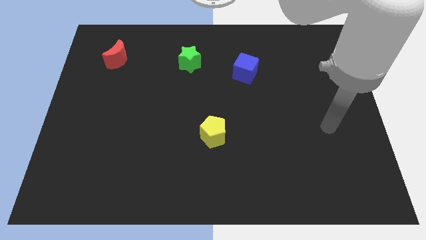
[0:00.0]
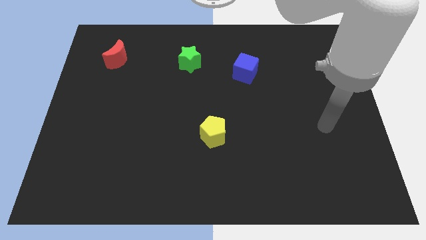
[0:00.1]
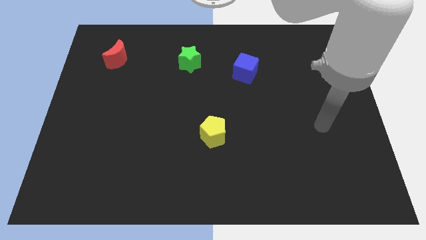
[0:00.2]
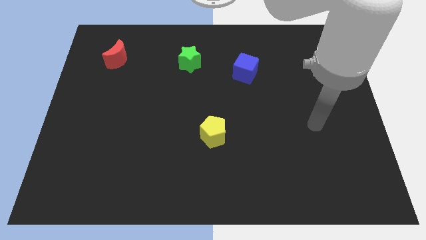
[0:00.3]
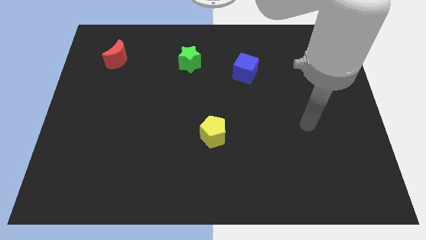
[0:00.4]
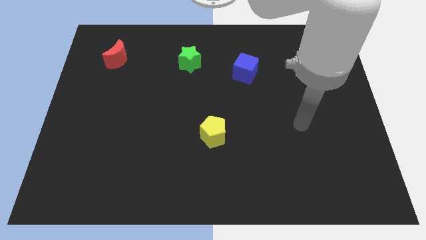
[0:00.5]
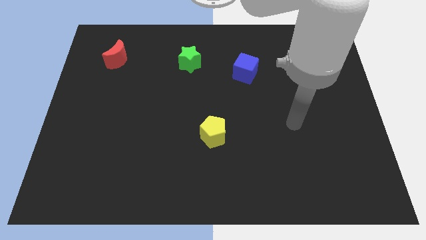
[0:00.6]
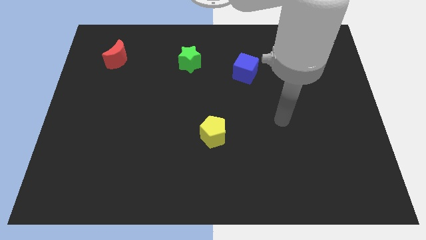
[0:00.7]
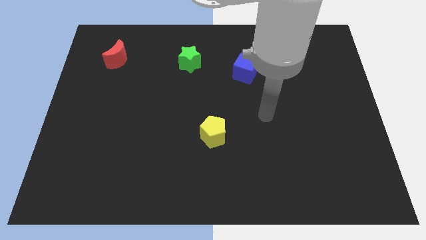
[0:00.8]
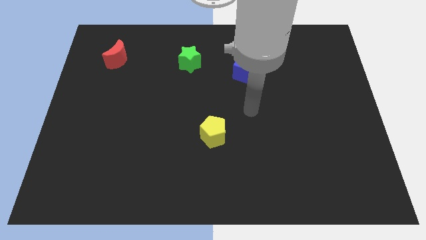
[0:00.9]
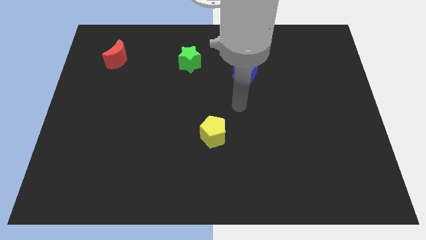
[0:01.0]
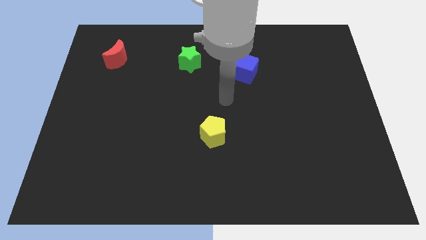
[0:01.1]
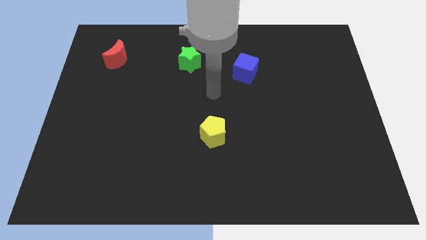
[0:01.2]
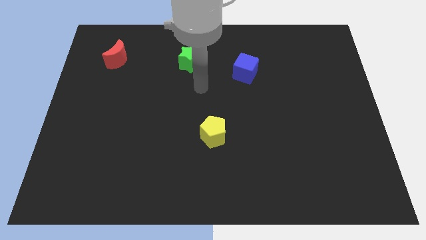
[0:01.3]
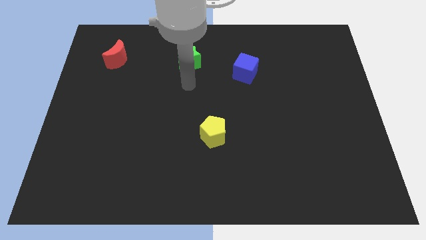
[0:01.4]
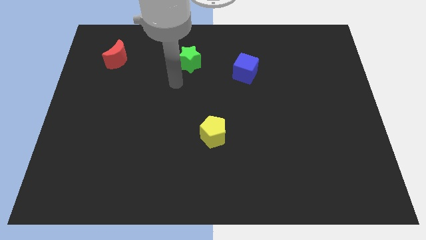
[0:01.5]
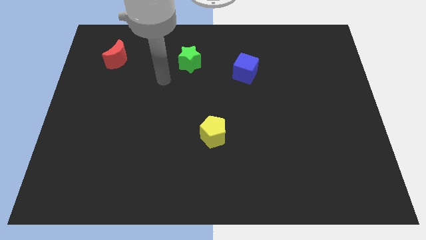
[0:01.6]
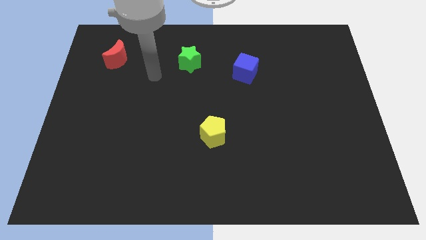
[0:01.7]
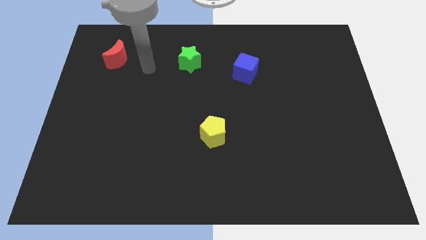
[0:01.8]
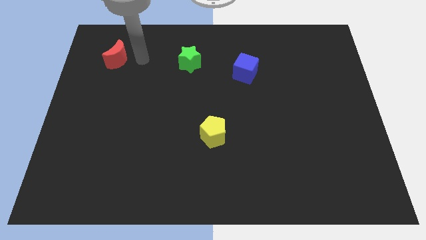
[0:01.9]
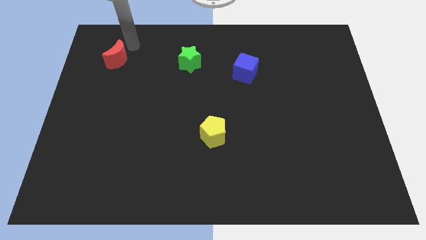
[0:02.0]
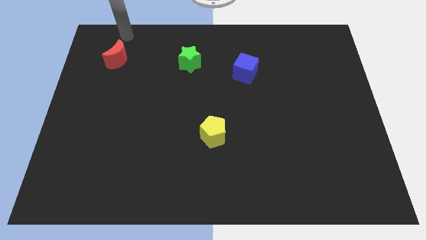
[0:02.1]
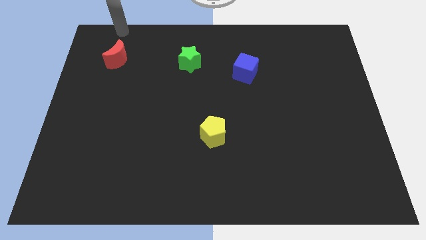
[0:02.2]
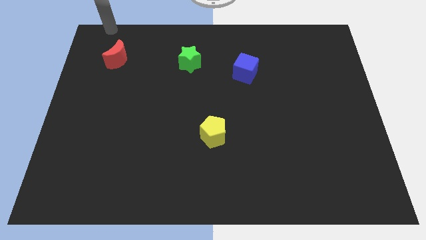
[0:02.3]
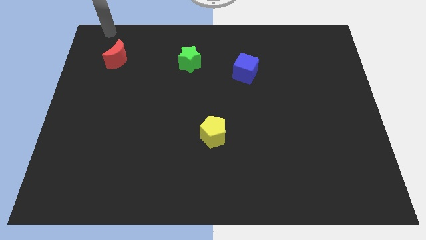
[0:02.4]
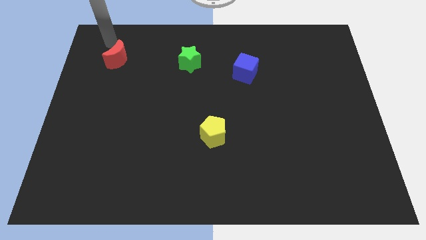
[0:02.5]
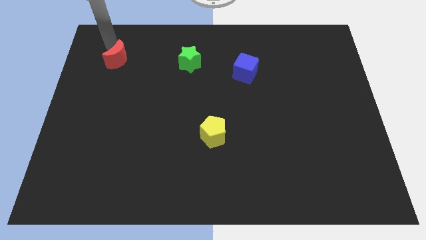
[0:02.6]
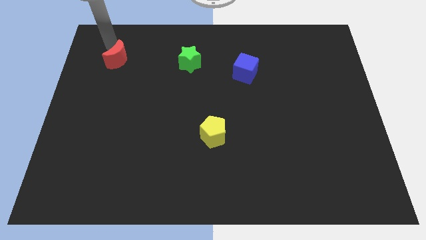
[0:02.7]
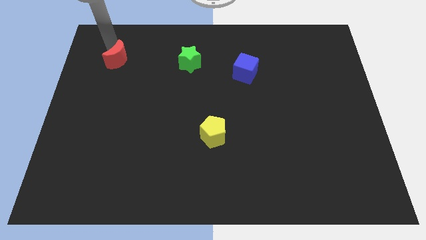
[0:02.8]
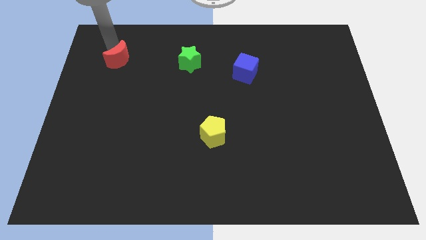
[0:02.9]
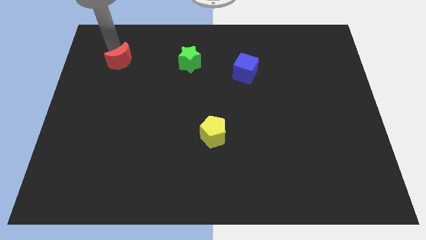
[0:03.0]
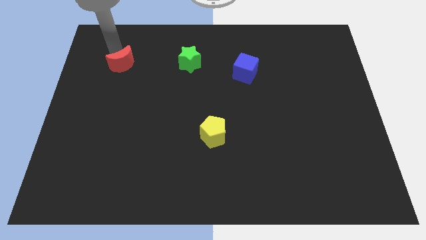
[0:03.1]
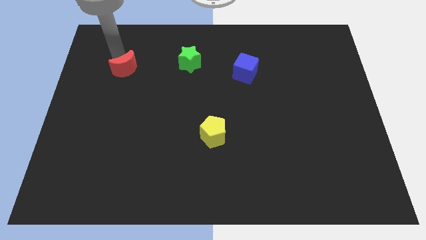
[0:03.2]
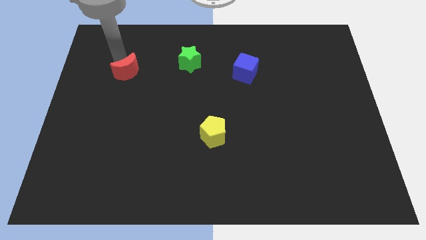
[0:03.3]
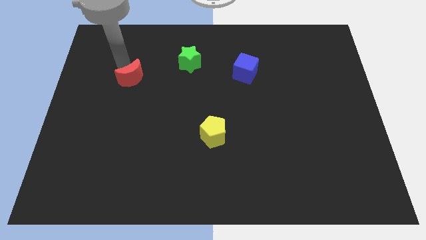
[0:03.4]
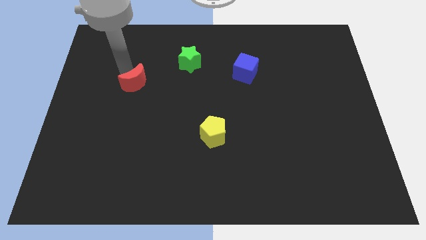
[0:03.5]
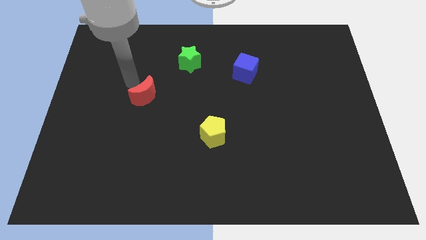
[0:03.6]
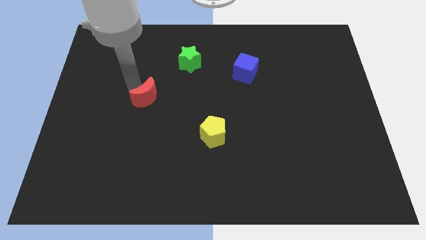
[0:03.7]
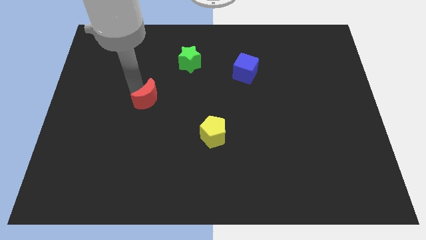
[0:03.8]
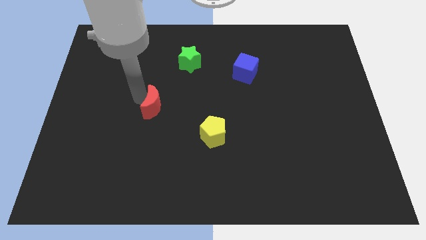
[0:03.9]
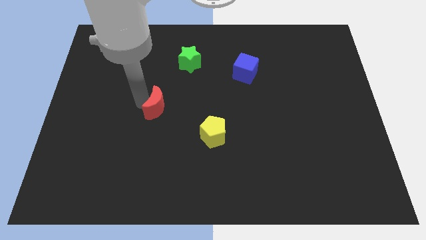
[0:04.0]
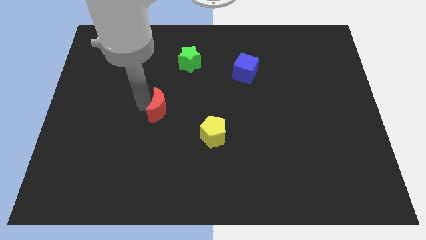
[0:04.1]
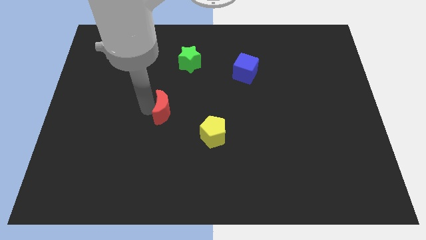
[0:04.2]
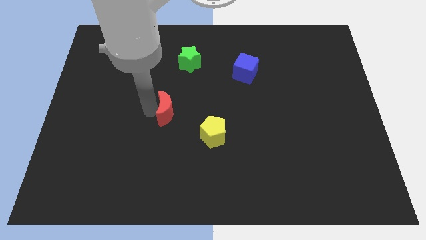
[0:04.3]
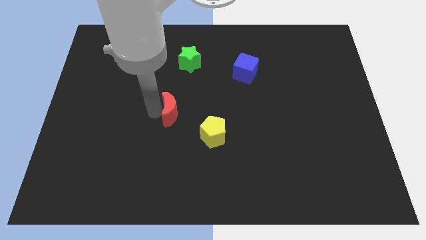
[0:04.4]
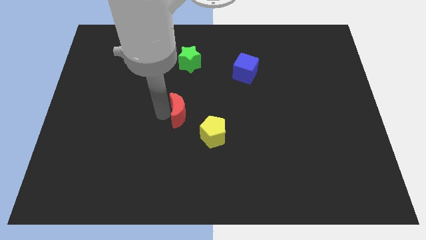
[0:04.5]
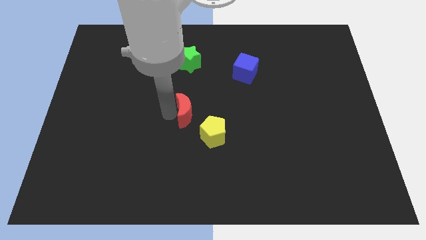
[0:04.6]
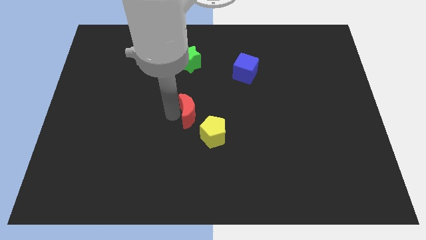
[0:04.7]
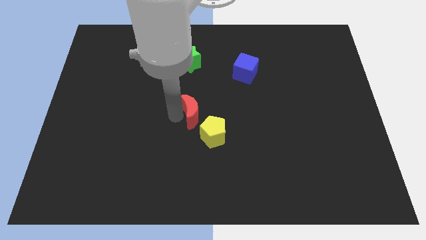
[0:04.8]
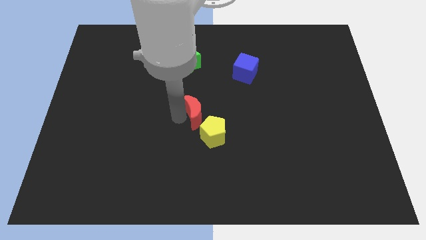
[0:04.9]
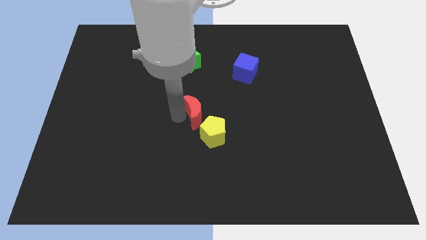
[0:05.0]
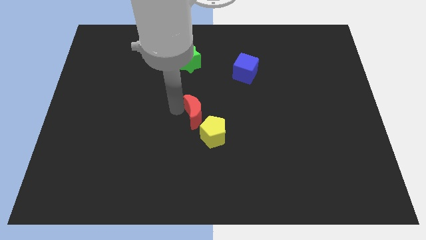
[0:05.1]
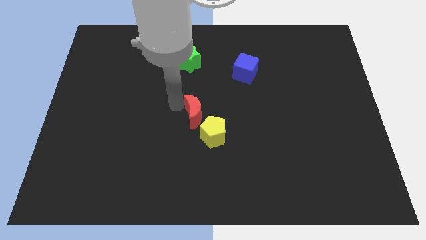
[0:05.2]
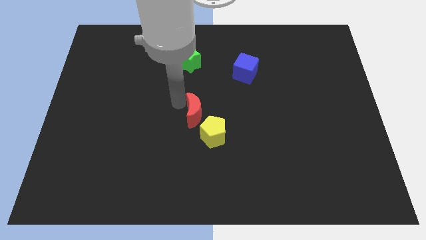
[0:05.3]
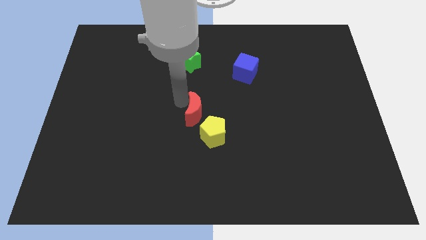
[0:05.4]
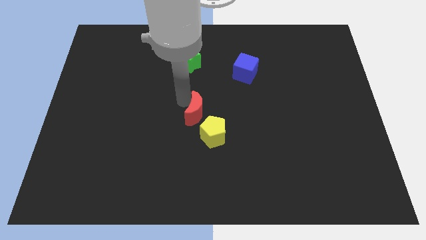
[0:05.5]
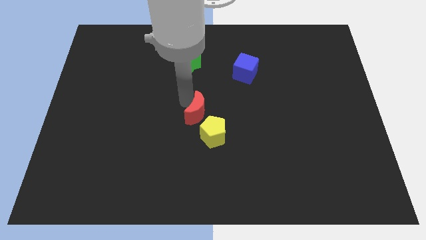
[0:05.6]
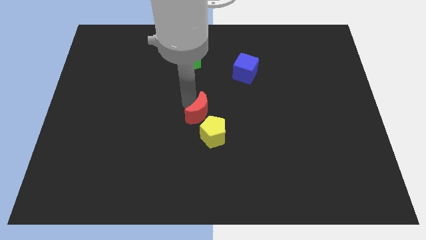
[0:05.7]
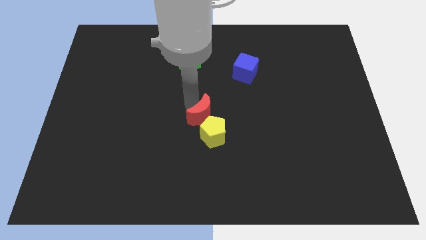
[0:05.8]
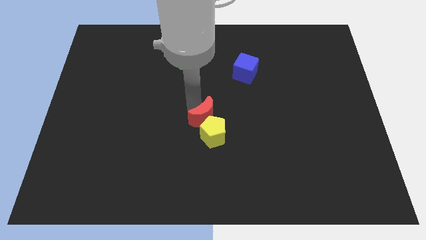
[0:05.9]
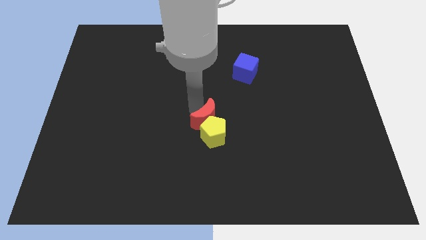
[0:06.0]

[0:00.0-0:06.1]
slide the red moon next to the yellow pentagon
